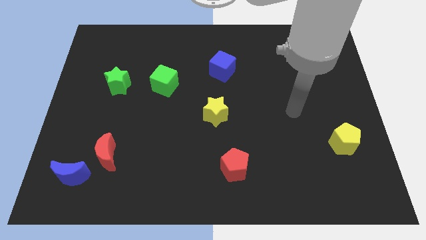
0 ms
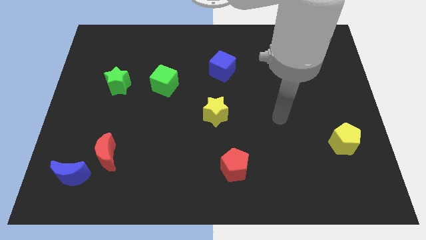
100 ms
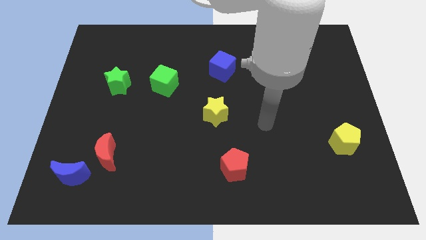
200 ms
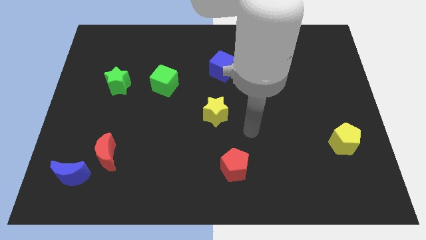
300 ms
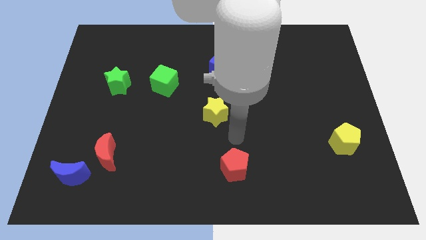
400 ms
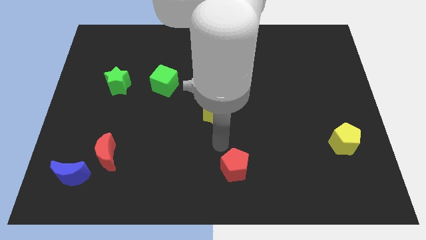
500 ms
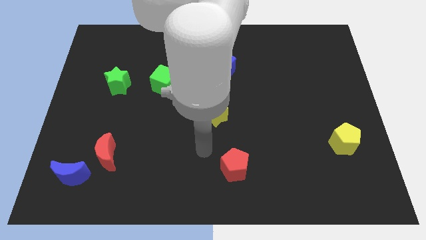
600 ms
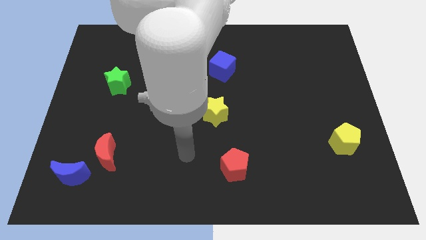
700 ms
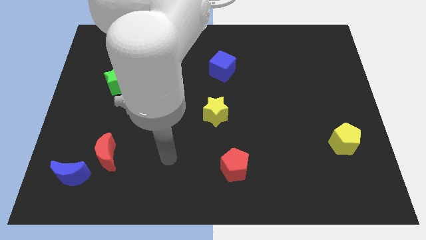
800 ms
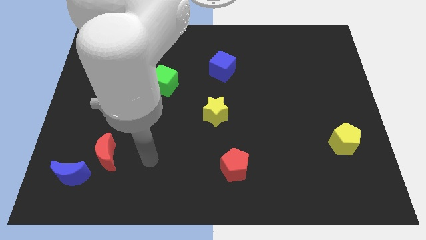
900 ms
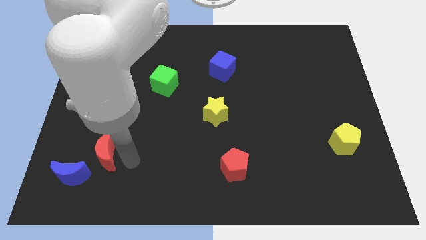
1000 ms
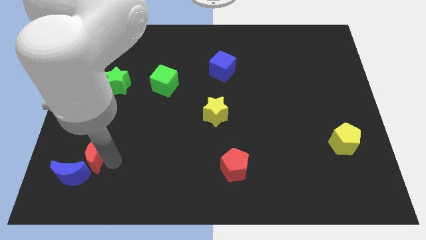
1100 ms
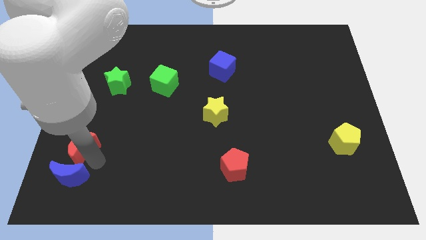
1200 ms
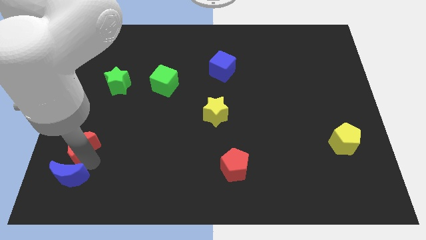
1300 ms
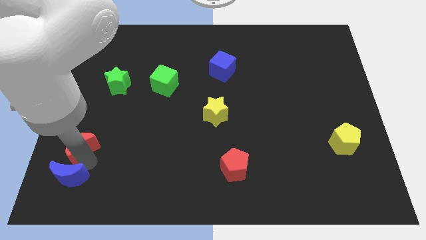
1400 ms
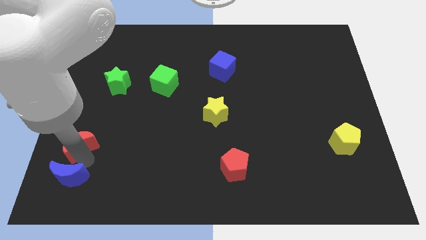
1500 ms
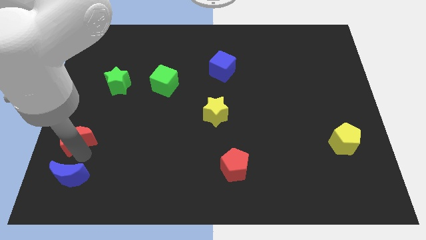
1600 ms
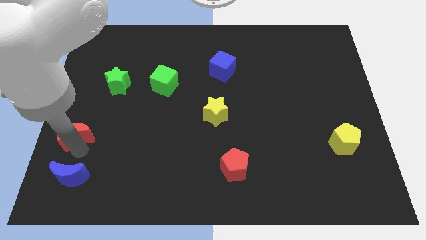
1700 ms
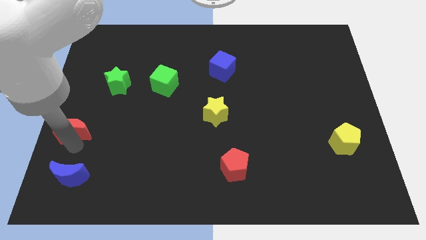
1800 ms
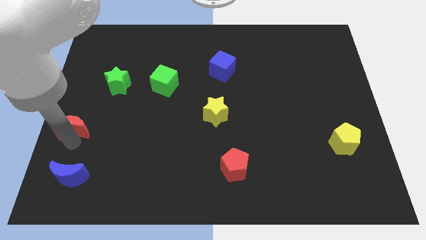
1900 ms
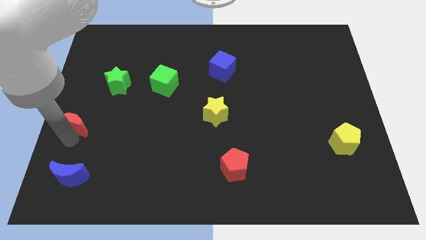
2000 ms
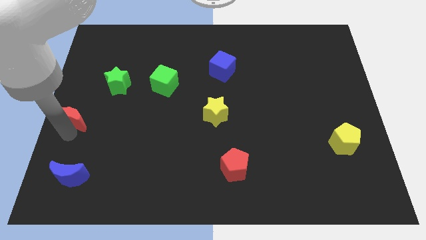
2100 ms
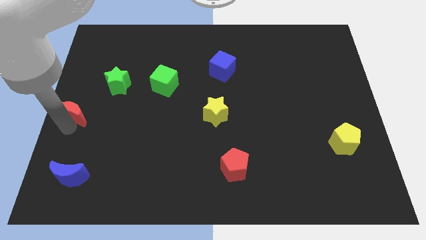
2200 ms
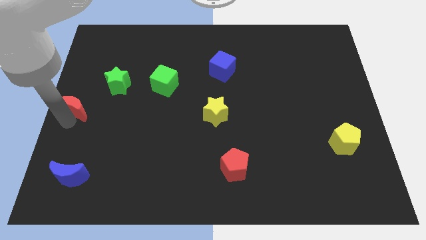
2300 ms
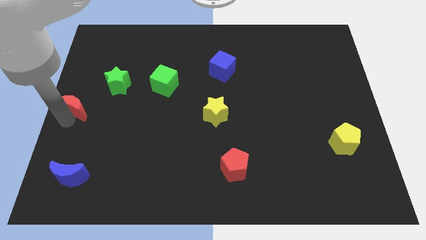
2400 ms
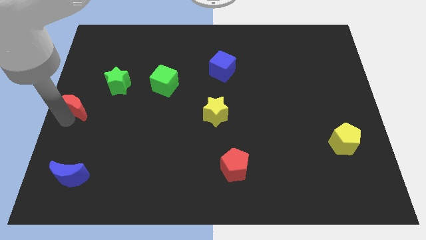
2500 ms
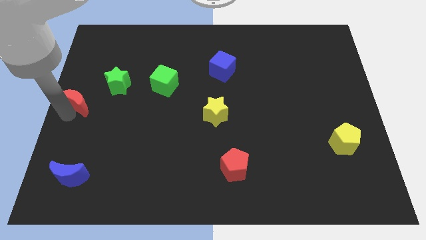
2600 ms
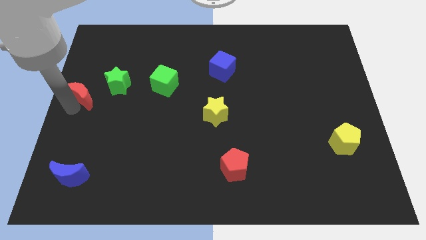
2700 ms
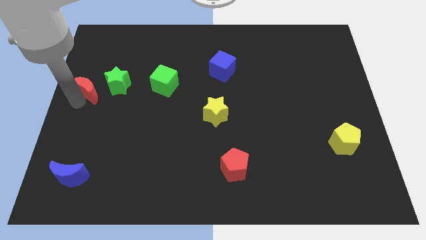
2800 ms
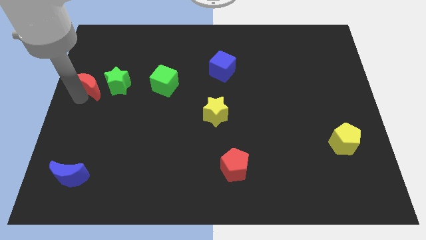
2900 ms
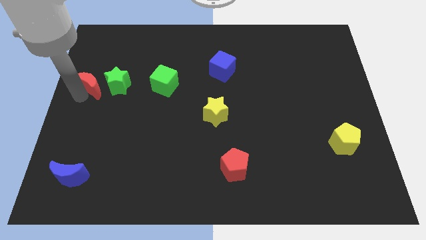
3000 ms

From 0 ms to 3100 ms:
slide red moon adjacent to the green star

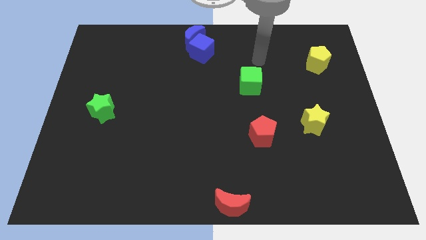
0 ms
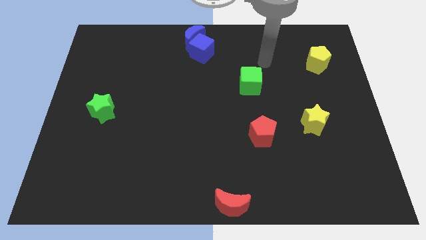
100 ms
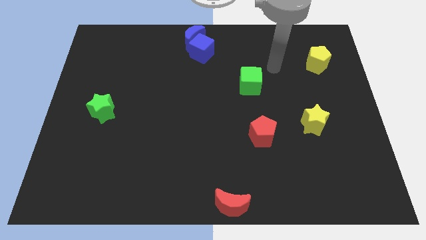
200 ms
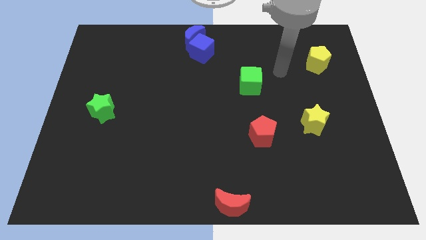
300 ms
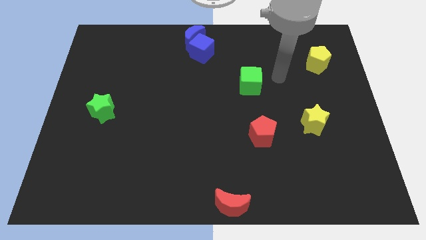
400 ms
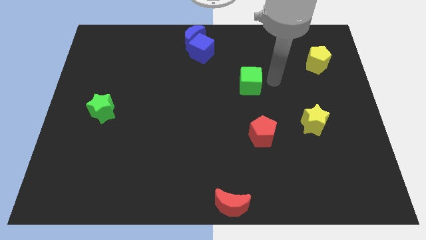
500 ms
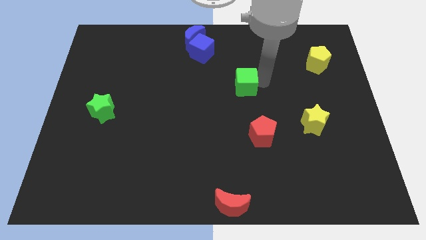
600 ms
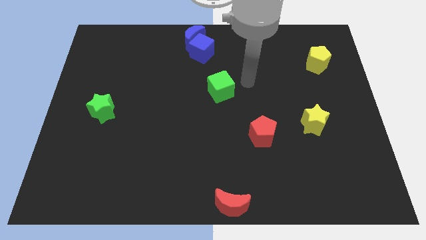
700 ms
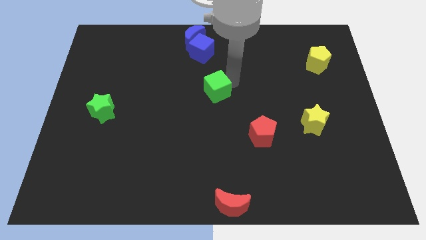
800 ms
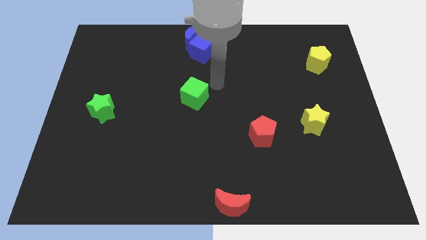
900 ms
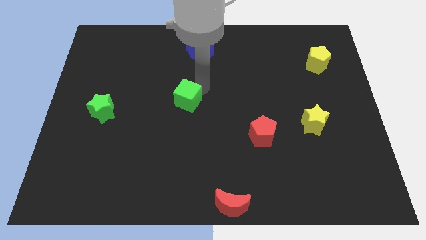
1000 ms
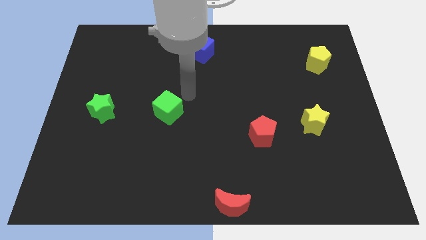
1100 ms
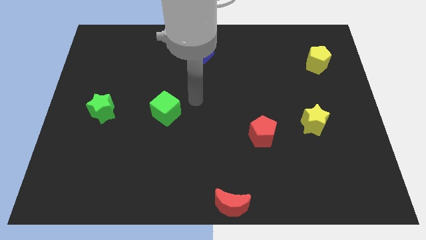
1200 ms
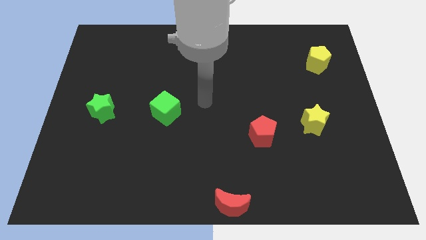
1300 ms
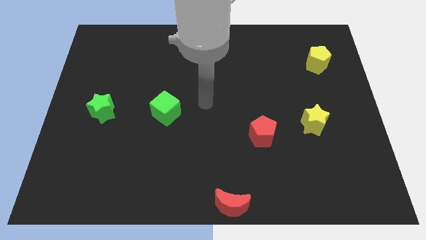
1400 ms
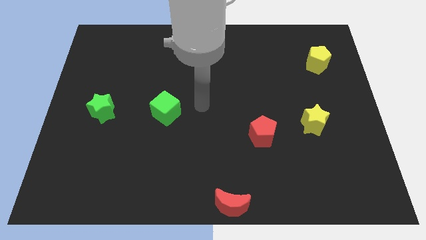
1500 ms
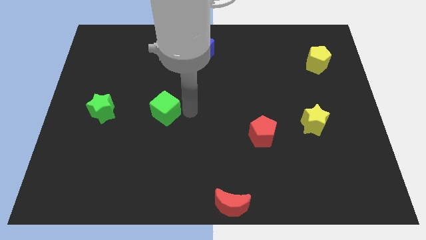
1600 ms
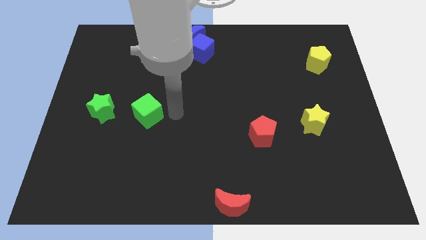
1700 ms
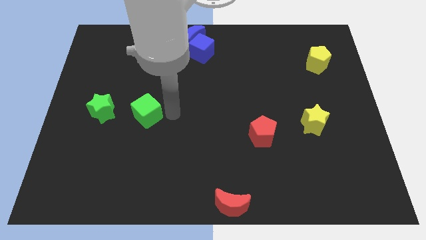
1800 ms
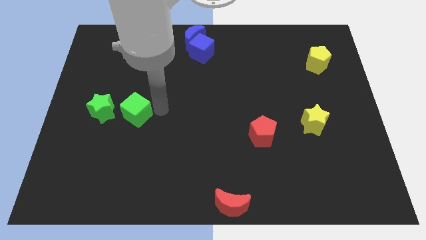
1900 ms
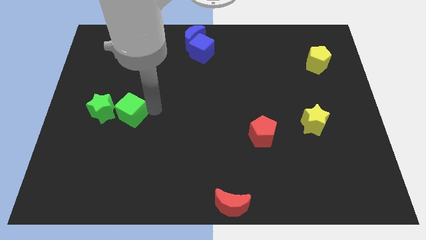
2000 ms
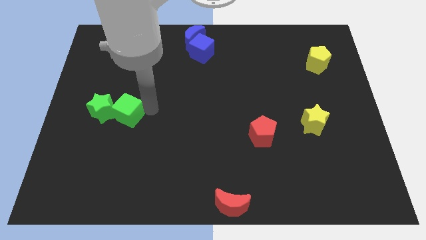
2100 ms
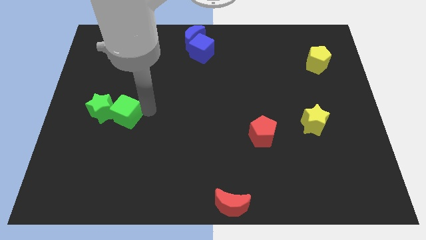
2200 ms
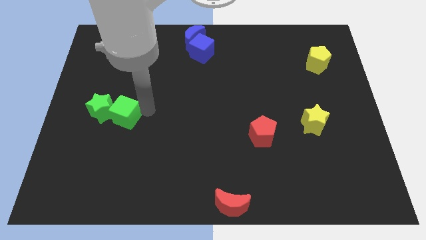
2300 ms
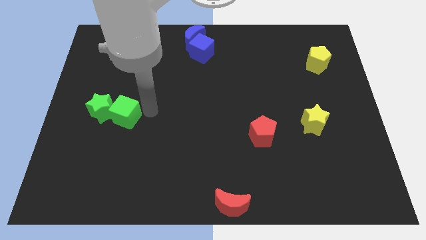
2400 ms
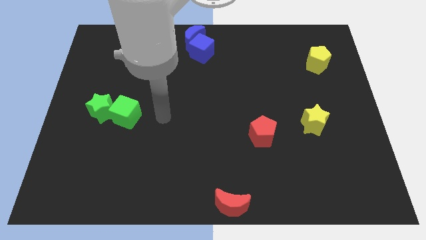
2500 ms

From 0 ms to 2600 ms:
push the green cube into green star

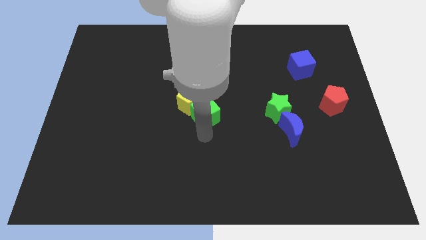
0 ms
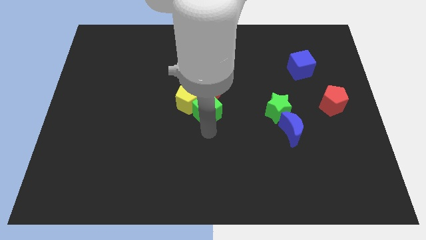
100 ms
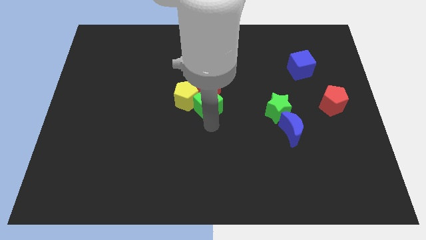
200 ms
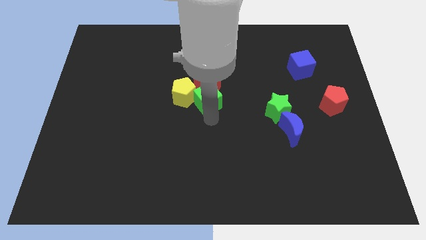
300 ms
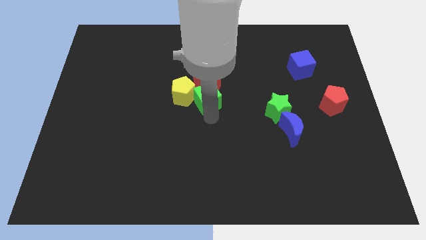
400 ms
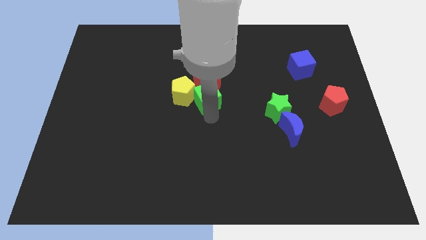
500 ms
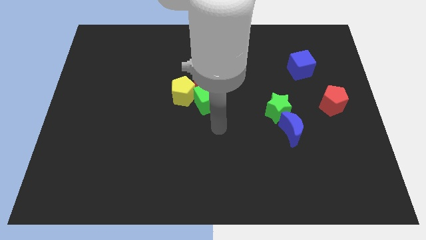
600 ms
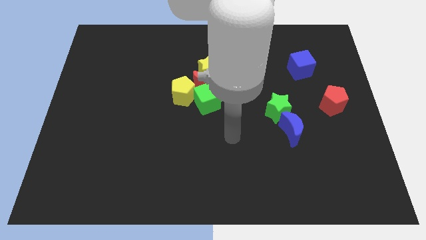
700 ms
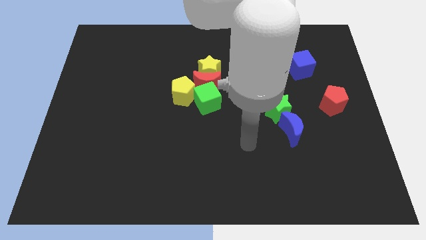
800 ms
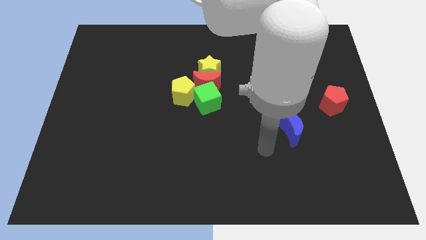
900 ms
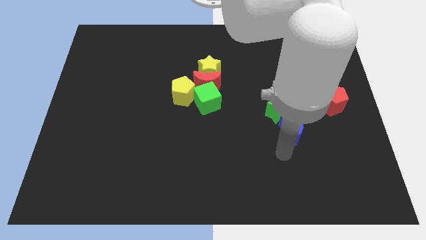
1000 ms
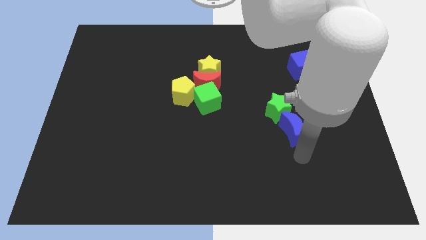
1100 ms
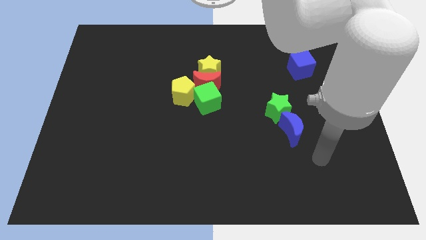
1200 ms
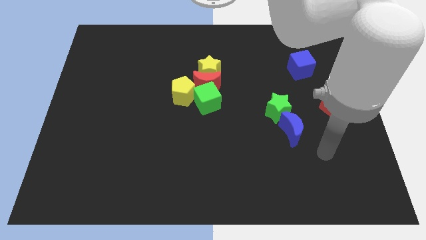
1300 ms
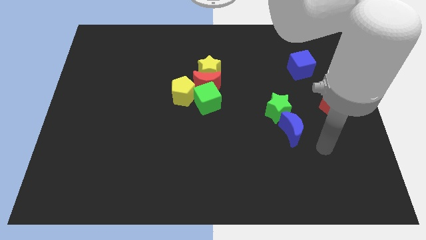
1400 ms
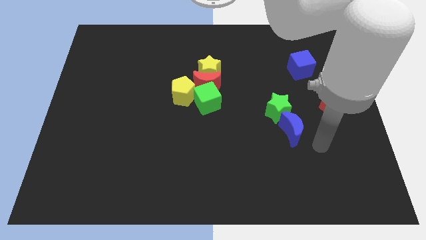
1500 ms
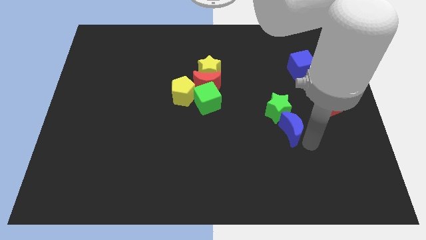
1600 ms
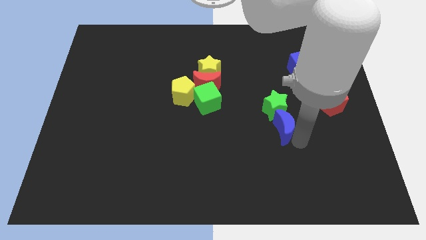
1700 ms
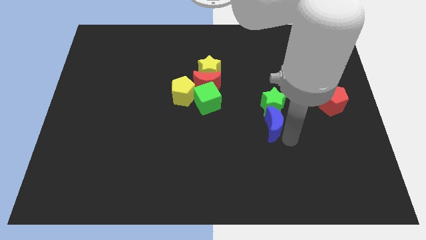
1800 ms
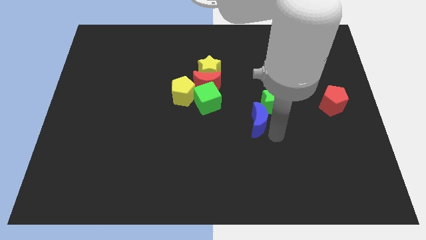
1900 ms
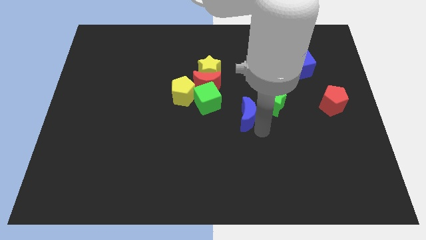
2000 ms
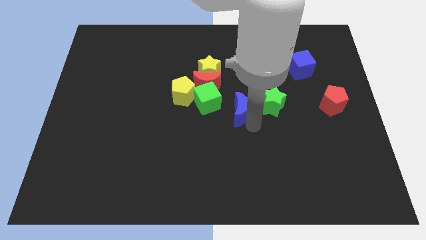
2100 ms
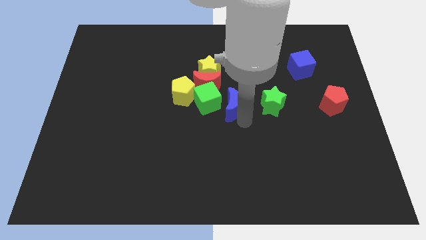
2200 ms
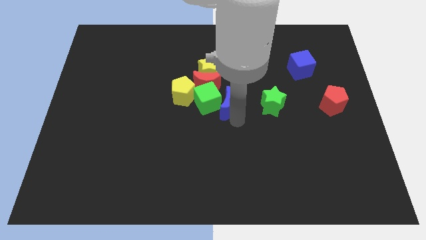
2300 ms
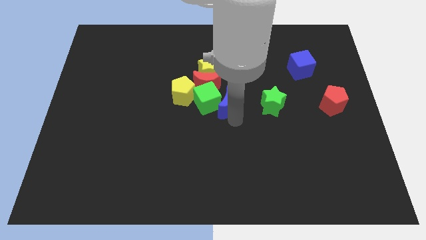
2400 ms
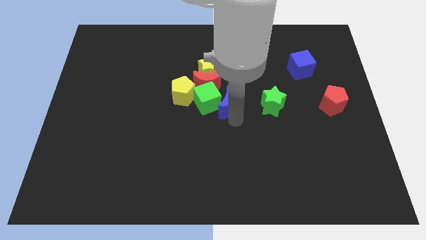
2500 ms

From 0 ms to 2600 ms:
place blue crescent beside green cube

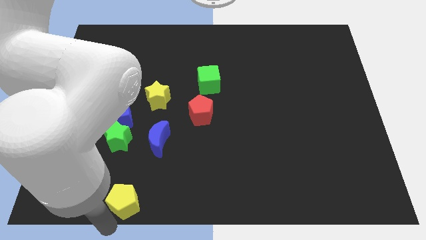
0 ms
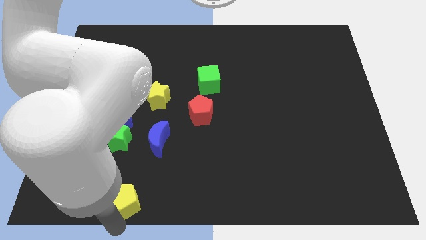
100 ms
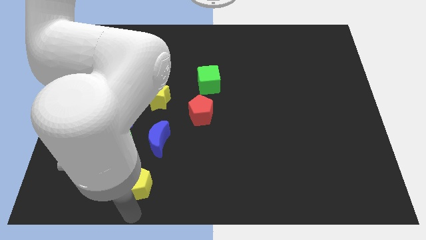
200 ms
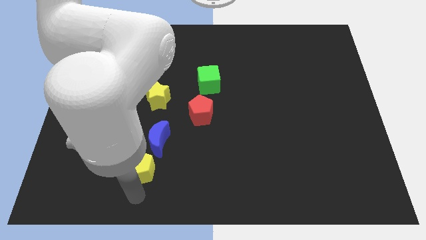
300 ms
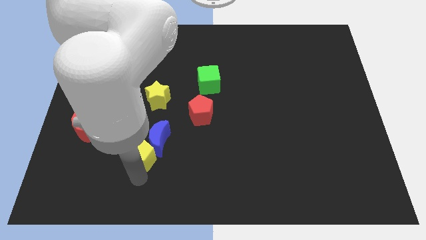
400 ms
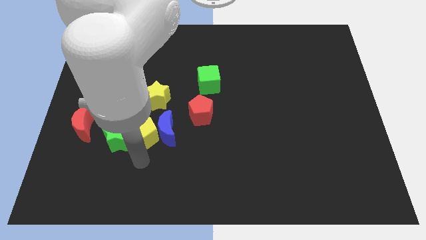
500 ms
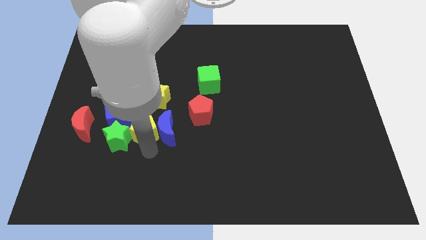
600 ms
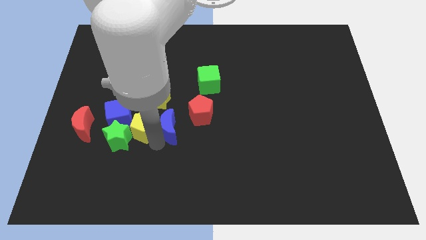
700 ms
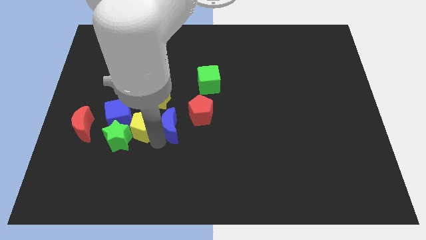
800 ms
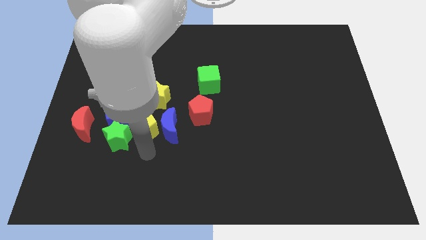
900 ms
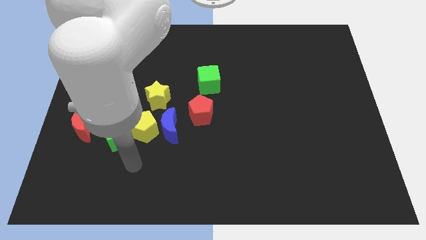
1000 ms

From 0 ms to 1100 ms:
move the yellow pentagon between the green star blue crescent
